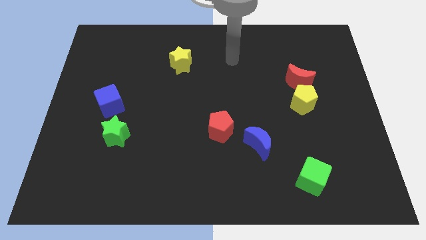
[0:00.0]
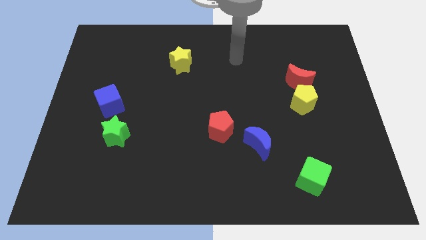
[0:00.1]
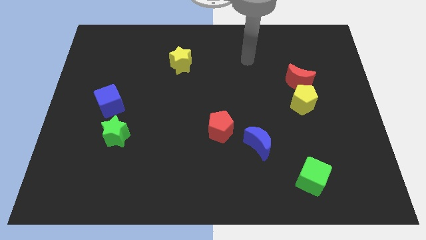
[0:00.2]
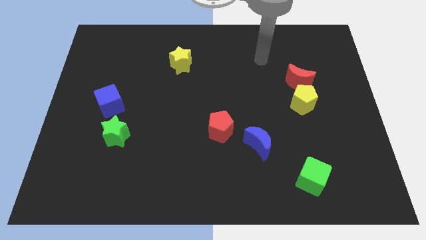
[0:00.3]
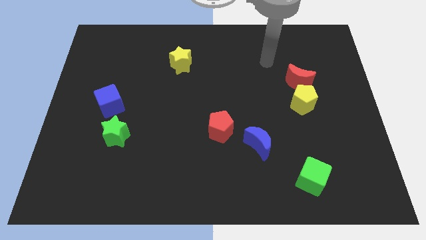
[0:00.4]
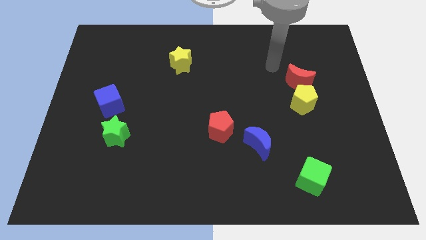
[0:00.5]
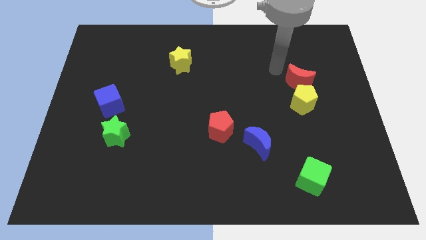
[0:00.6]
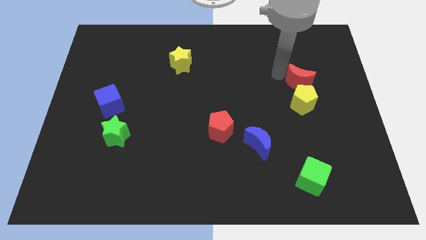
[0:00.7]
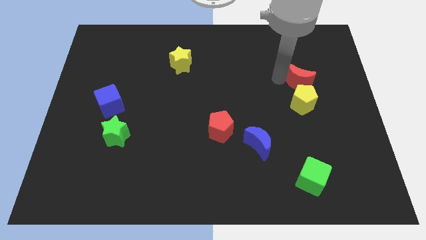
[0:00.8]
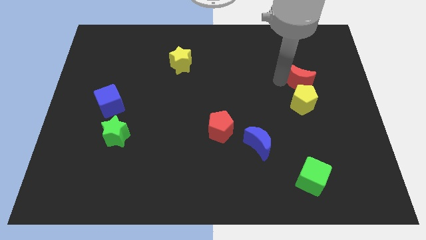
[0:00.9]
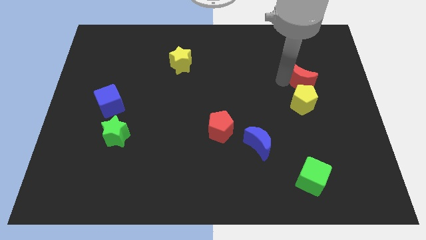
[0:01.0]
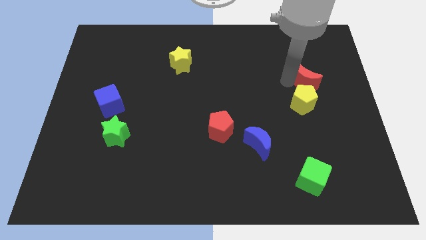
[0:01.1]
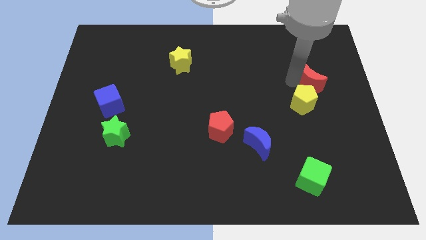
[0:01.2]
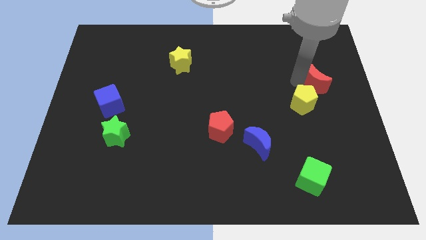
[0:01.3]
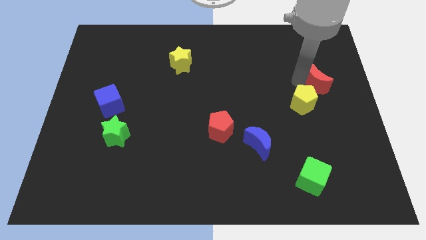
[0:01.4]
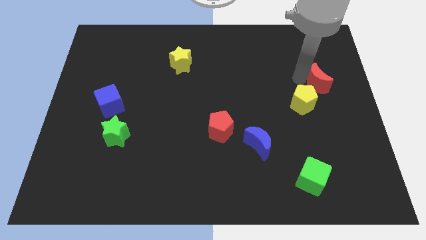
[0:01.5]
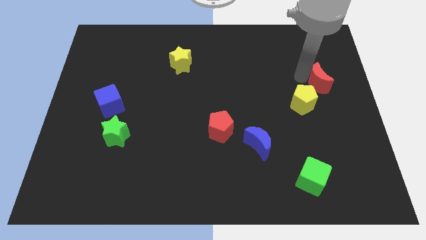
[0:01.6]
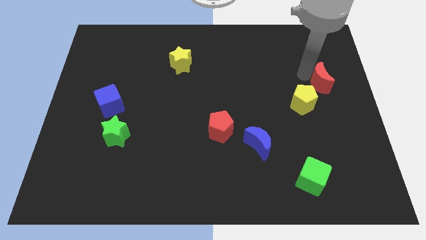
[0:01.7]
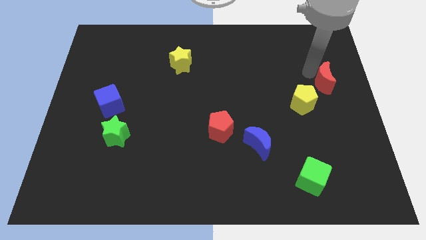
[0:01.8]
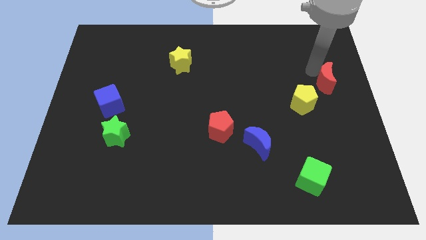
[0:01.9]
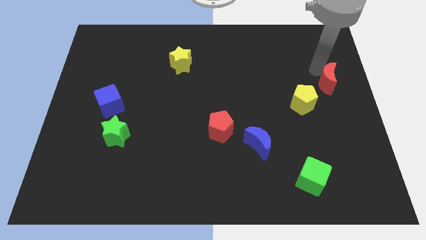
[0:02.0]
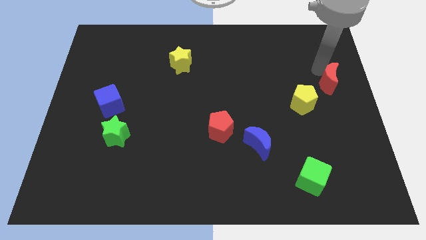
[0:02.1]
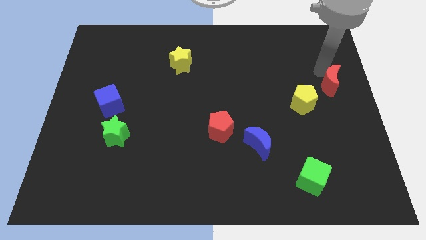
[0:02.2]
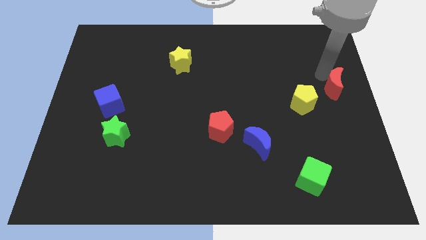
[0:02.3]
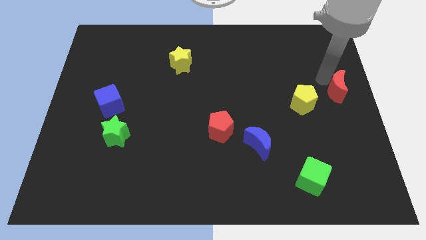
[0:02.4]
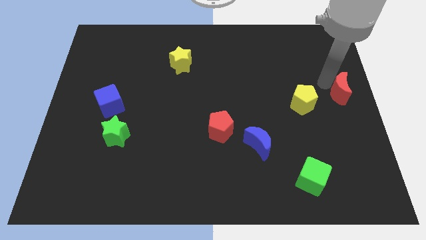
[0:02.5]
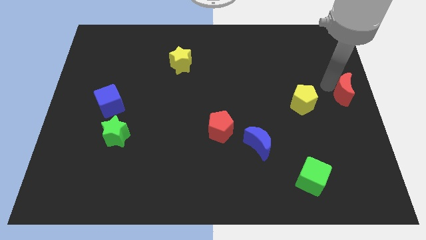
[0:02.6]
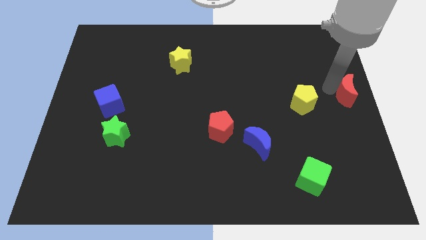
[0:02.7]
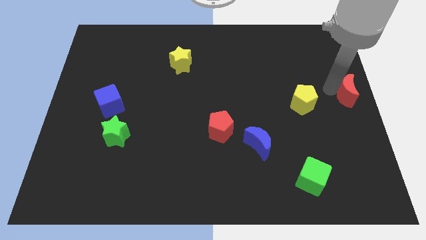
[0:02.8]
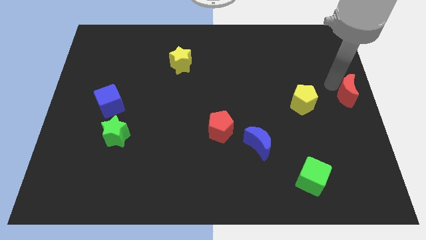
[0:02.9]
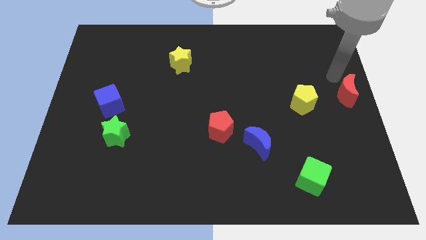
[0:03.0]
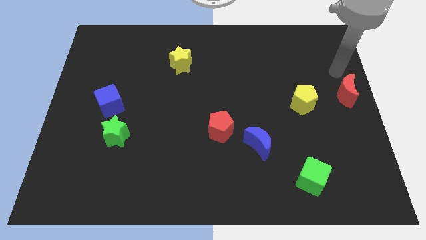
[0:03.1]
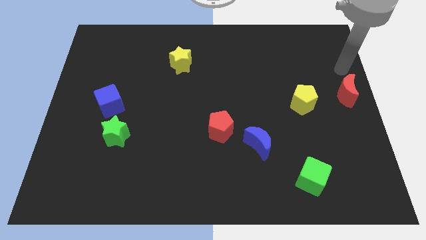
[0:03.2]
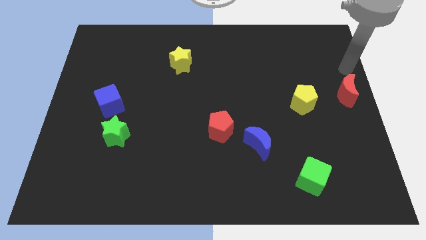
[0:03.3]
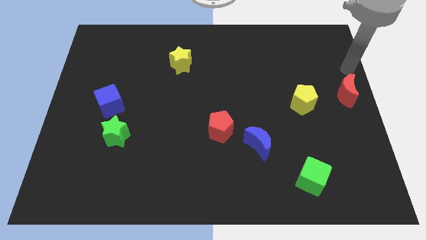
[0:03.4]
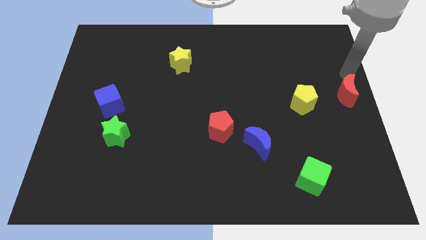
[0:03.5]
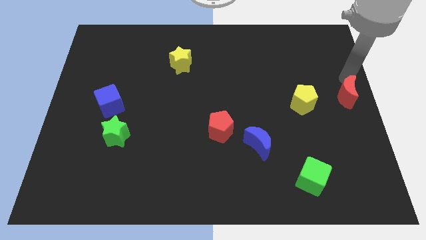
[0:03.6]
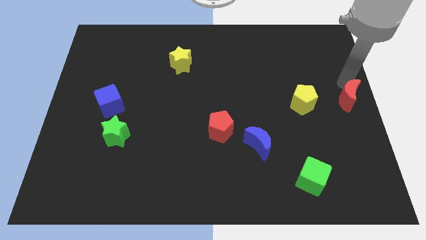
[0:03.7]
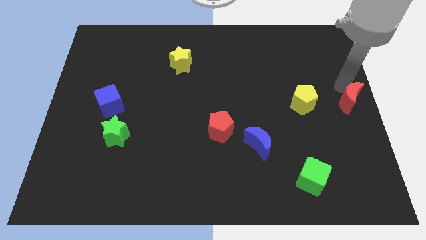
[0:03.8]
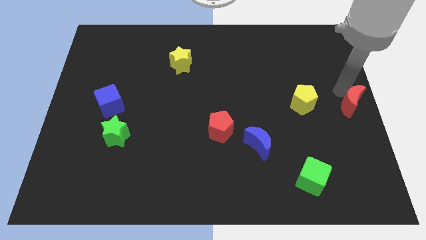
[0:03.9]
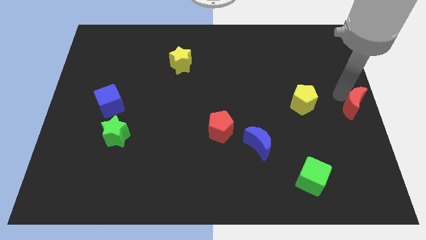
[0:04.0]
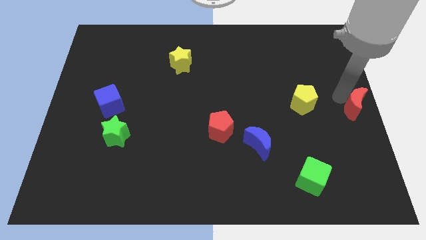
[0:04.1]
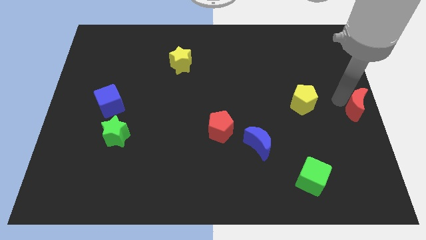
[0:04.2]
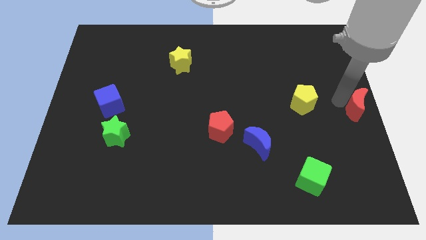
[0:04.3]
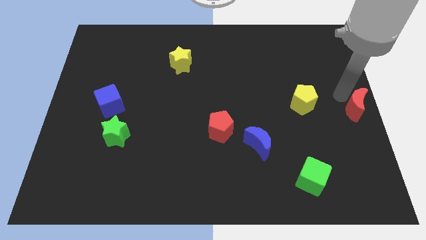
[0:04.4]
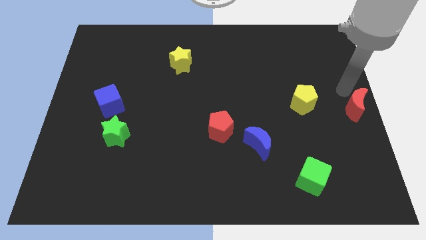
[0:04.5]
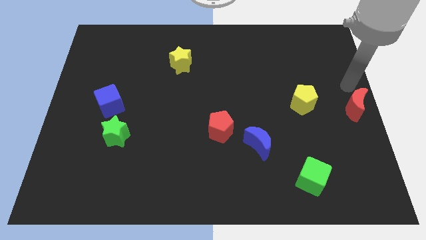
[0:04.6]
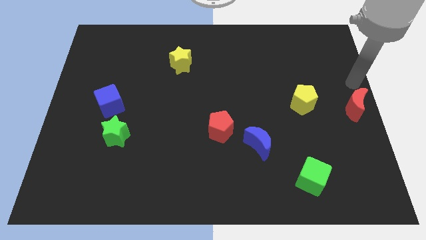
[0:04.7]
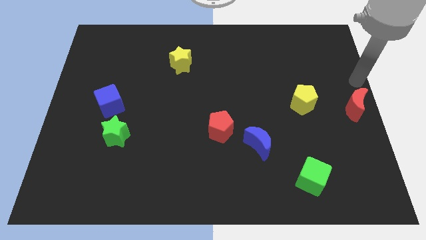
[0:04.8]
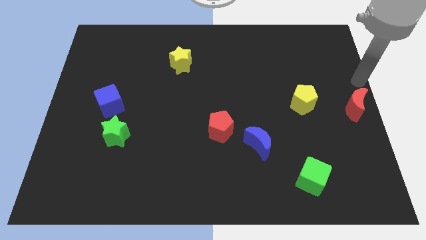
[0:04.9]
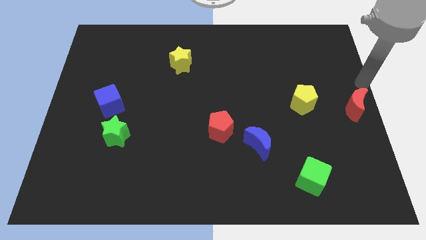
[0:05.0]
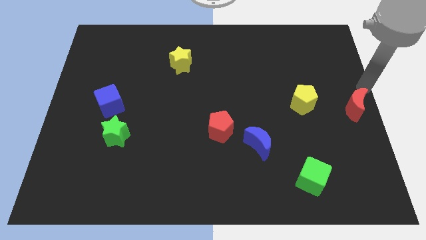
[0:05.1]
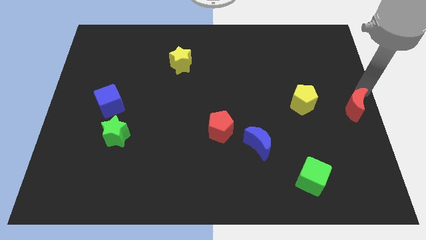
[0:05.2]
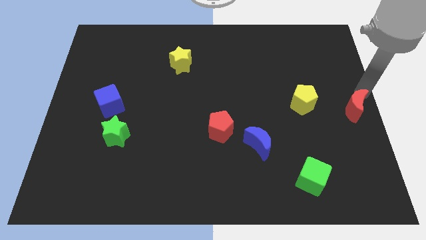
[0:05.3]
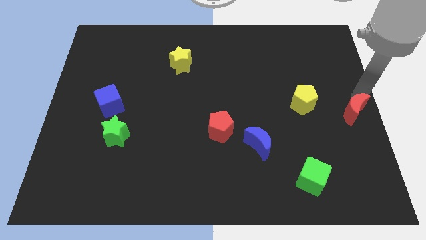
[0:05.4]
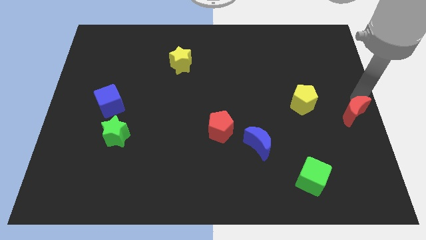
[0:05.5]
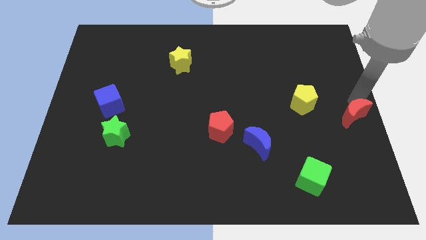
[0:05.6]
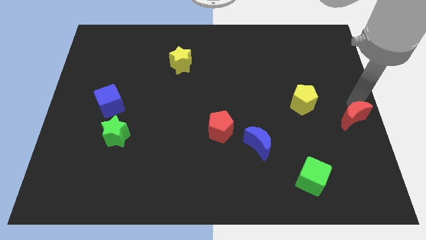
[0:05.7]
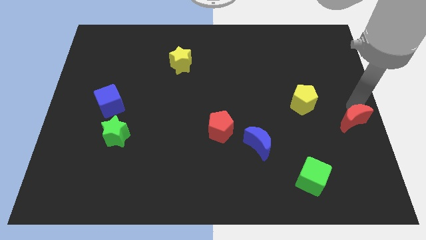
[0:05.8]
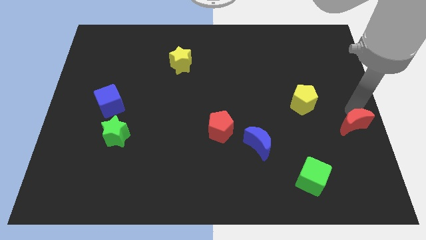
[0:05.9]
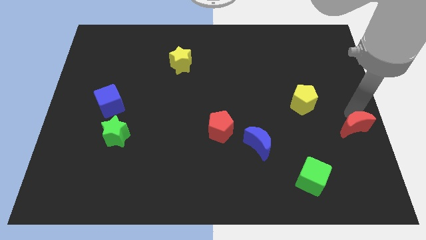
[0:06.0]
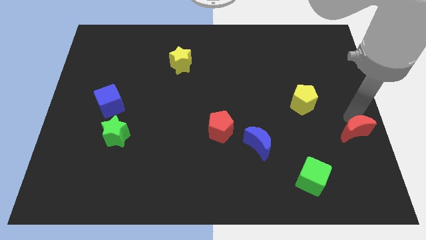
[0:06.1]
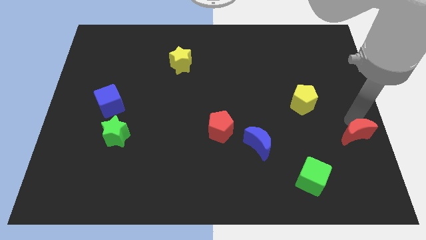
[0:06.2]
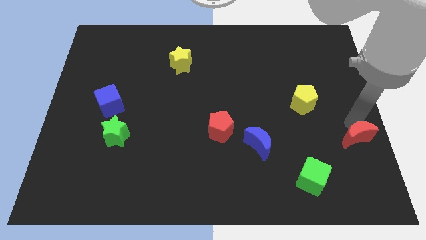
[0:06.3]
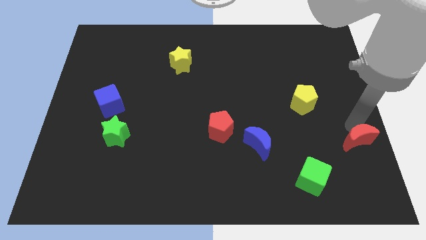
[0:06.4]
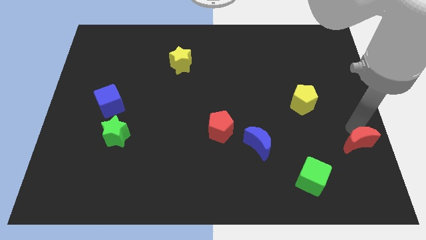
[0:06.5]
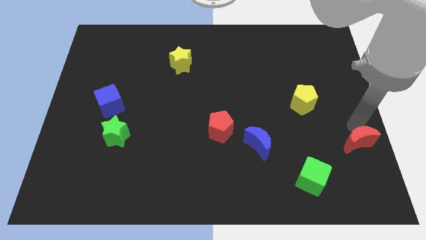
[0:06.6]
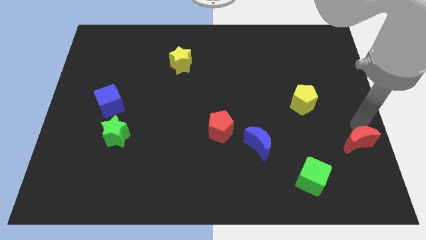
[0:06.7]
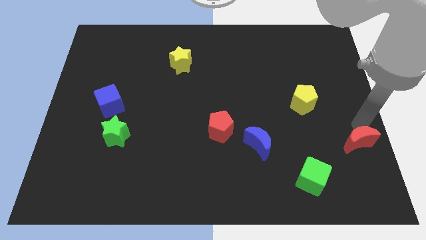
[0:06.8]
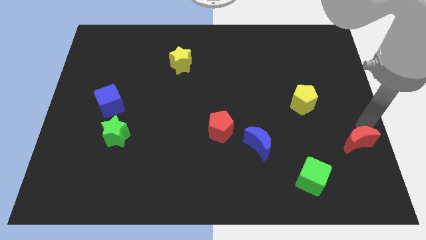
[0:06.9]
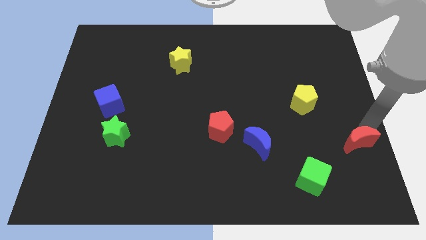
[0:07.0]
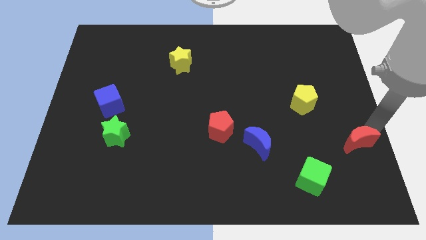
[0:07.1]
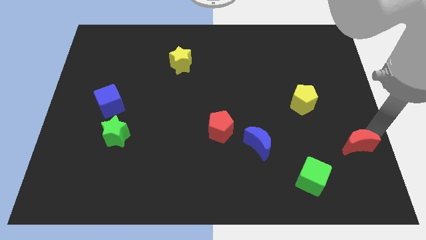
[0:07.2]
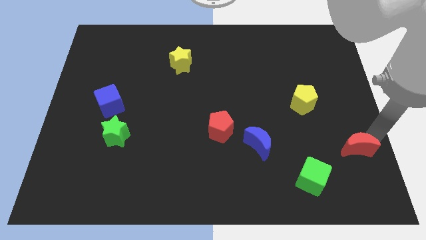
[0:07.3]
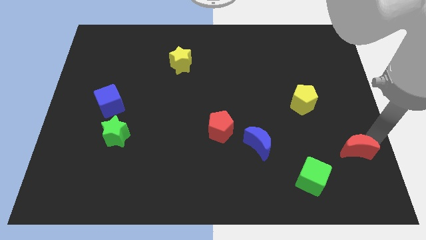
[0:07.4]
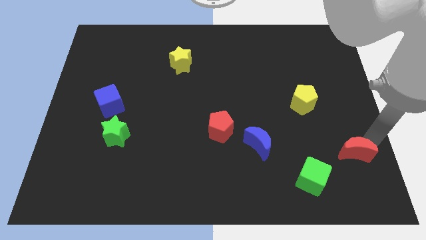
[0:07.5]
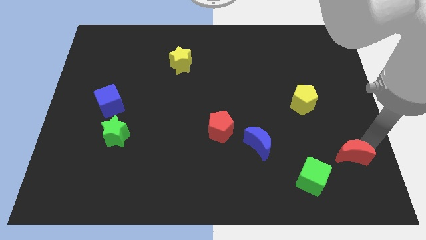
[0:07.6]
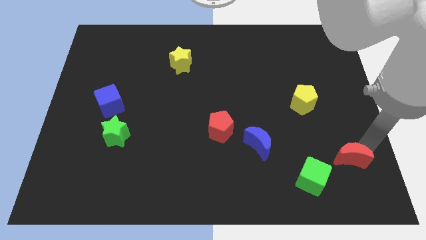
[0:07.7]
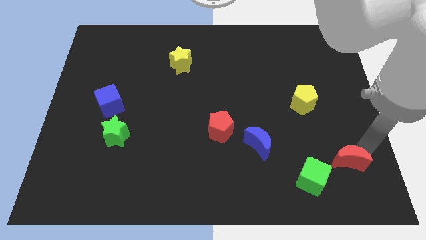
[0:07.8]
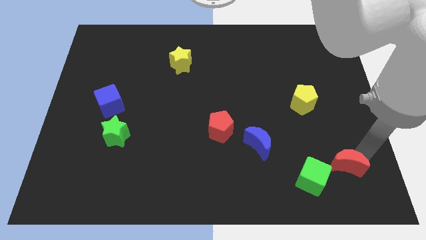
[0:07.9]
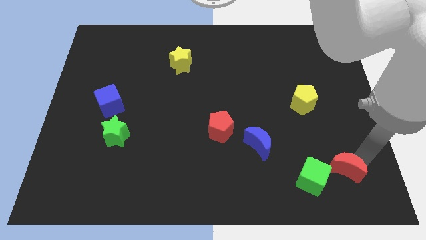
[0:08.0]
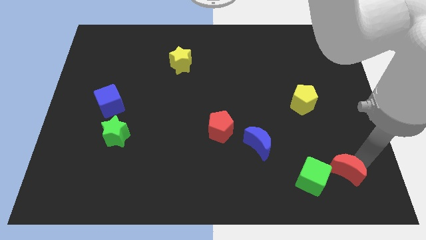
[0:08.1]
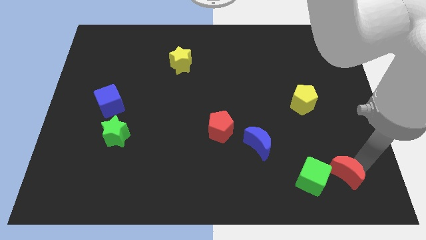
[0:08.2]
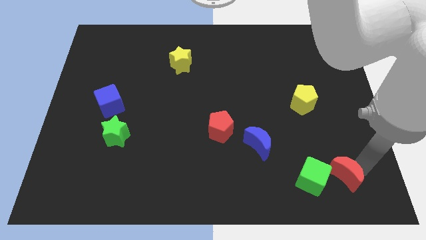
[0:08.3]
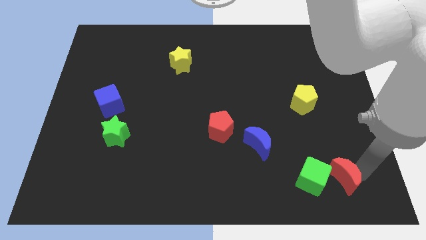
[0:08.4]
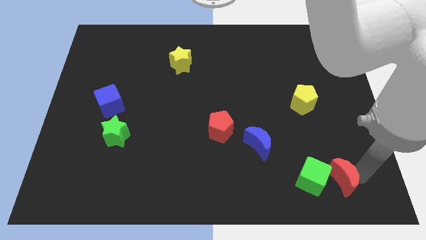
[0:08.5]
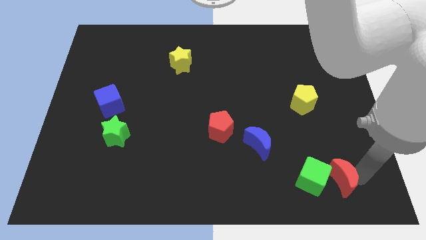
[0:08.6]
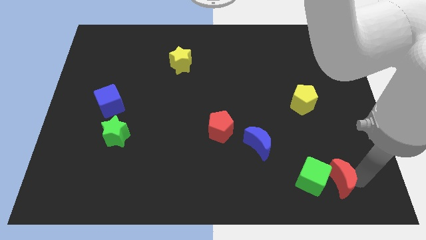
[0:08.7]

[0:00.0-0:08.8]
push the red moon close to the green cube
